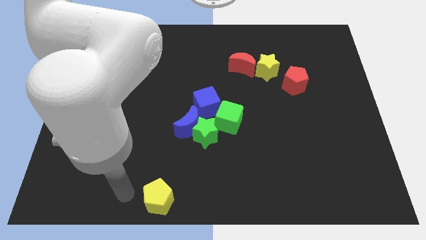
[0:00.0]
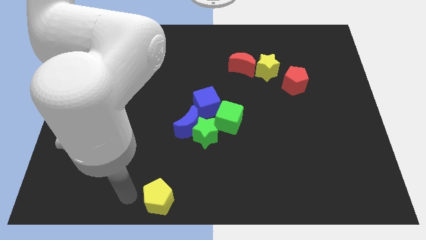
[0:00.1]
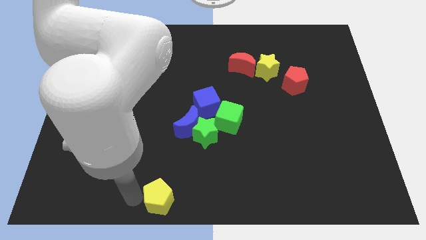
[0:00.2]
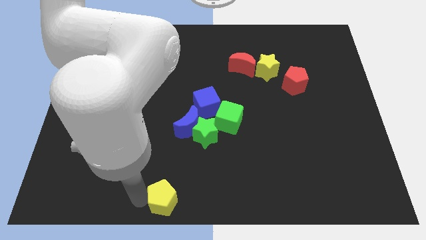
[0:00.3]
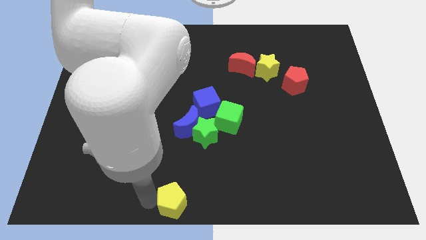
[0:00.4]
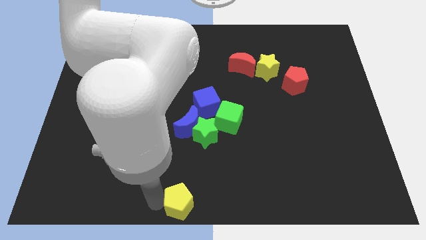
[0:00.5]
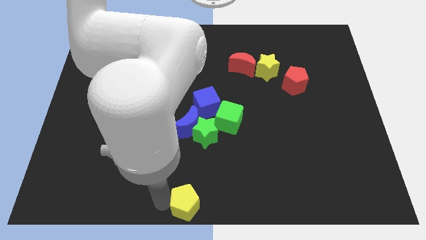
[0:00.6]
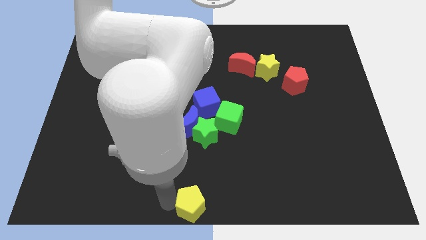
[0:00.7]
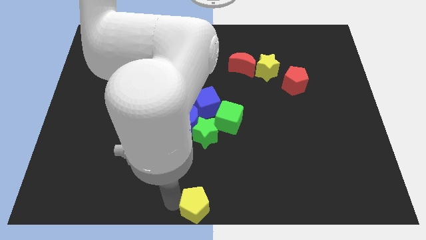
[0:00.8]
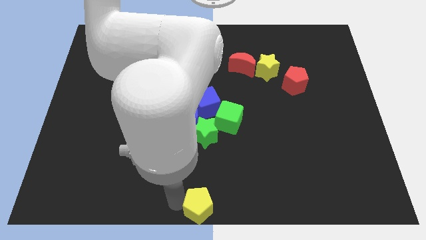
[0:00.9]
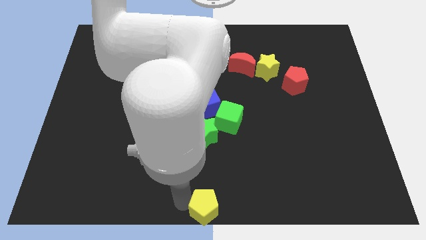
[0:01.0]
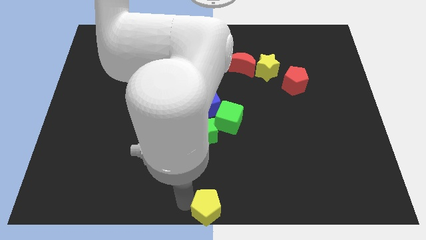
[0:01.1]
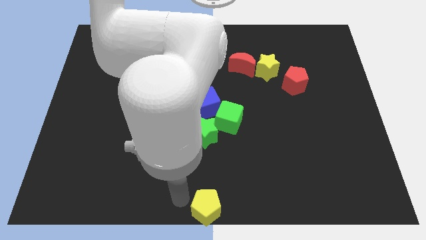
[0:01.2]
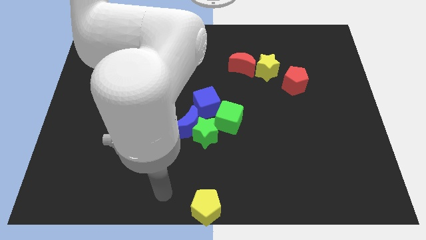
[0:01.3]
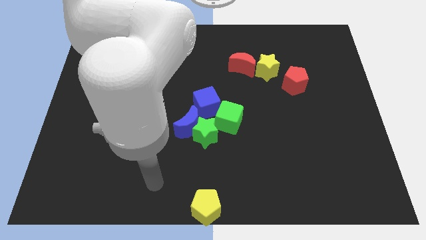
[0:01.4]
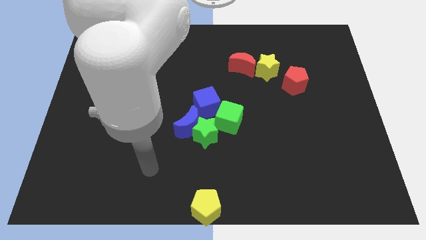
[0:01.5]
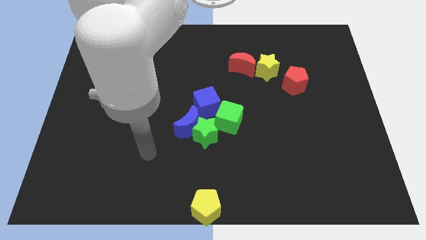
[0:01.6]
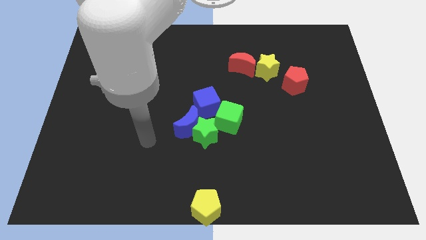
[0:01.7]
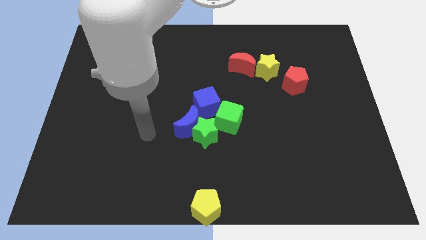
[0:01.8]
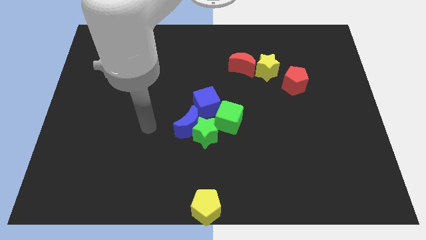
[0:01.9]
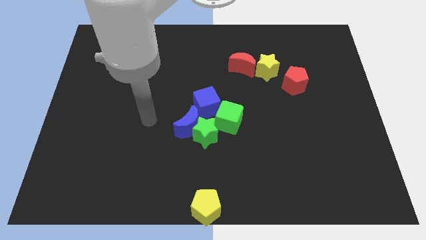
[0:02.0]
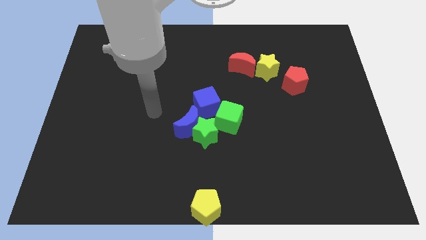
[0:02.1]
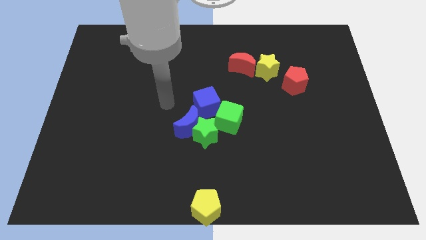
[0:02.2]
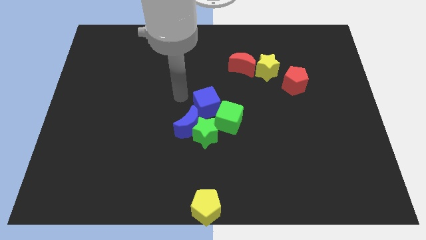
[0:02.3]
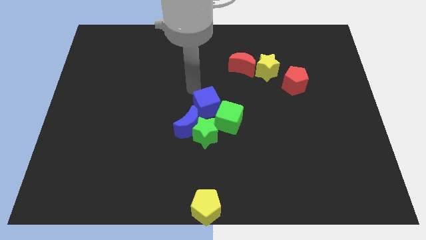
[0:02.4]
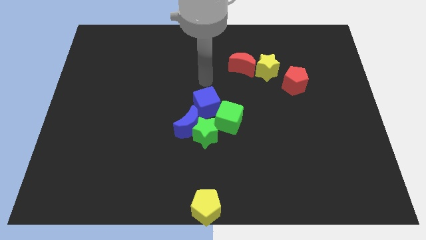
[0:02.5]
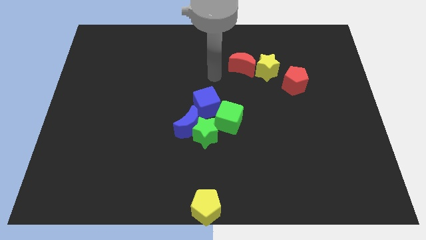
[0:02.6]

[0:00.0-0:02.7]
place the yellow pentagon to the bottom center

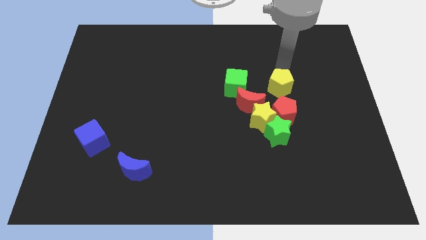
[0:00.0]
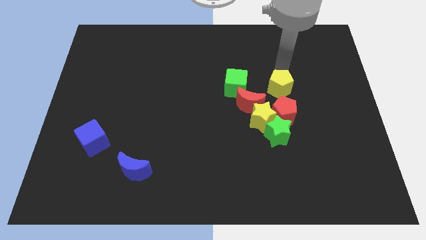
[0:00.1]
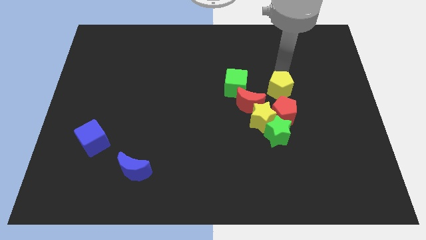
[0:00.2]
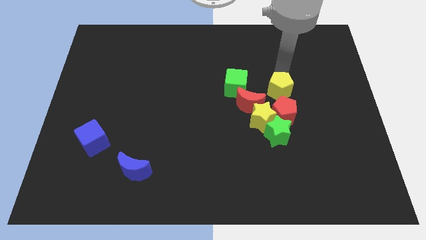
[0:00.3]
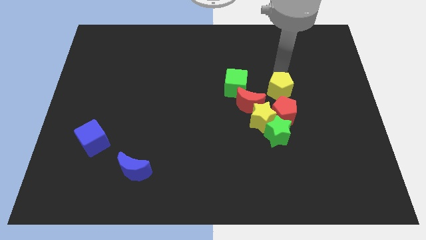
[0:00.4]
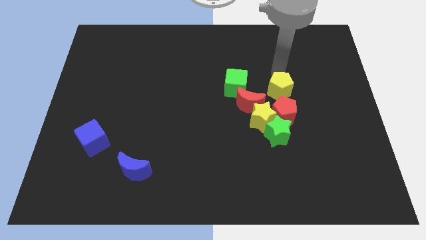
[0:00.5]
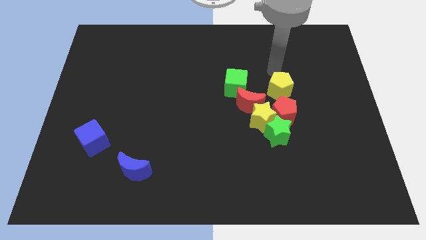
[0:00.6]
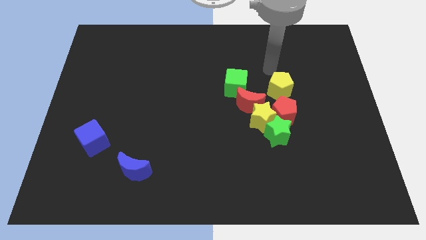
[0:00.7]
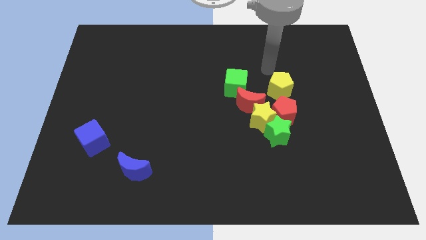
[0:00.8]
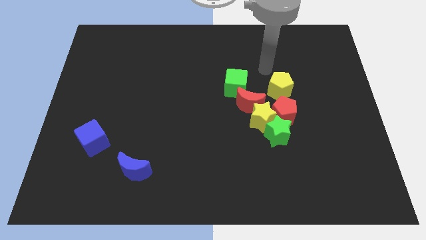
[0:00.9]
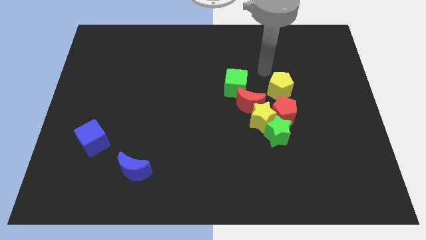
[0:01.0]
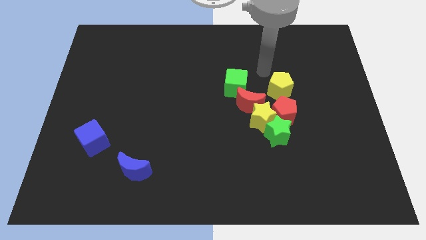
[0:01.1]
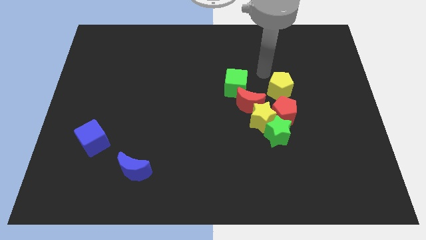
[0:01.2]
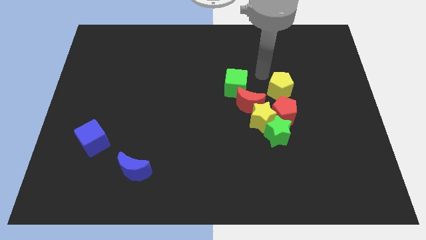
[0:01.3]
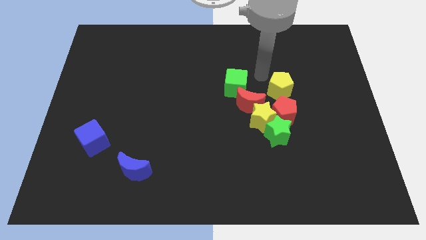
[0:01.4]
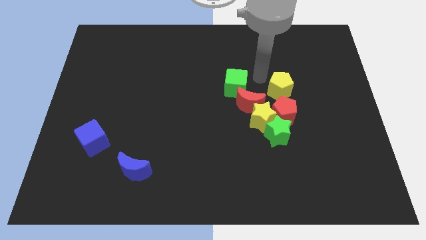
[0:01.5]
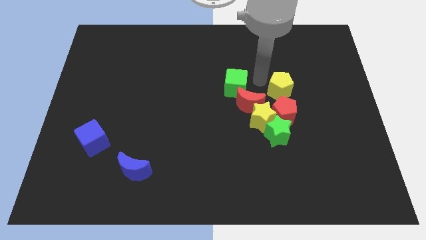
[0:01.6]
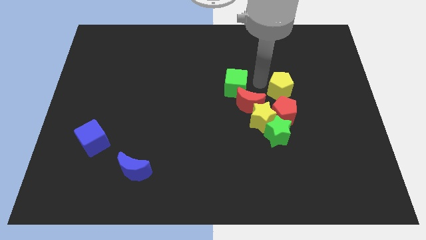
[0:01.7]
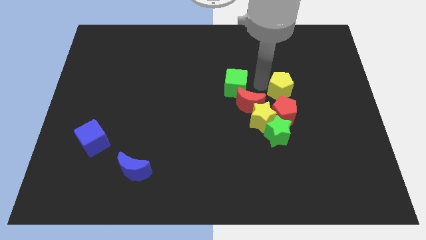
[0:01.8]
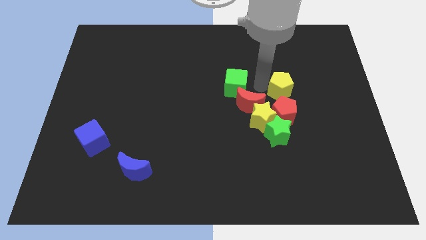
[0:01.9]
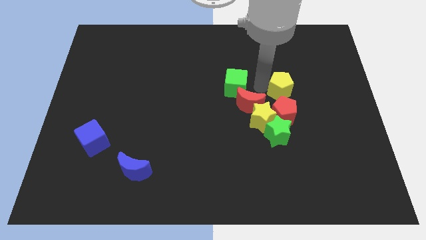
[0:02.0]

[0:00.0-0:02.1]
move the yellow pentagon close to the red pentagon

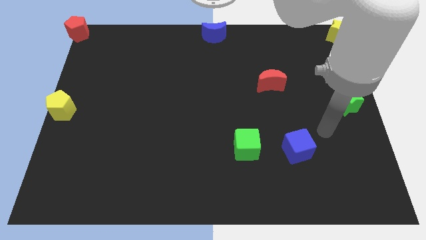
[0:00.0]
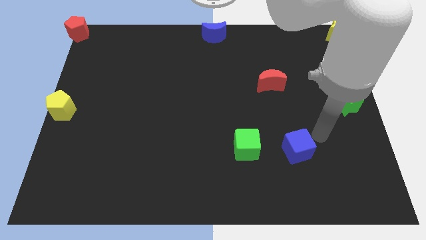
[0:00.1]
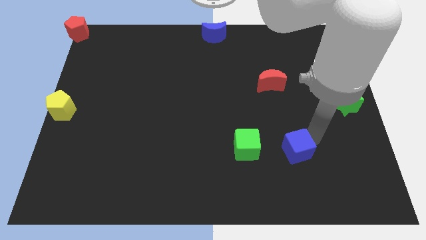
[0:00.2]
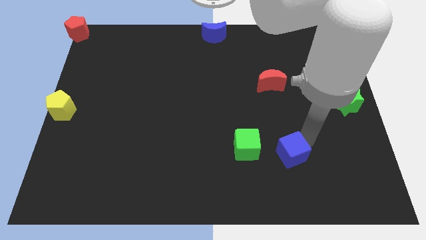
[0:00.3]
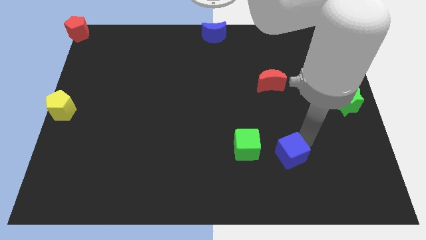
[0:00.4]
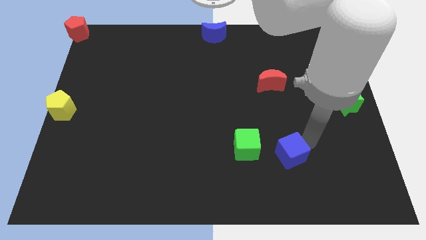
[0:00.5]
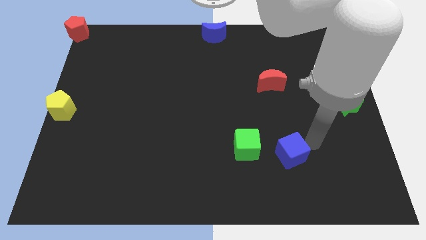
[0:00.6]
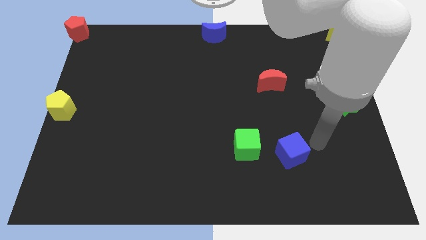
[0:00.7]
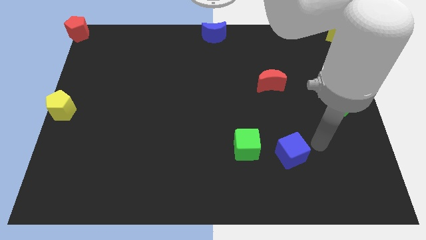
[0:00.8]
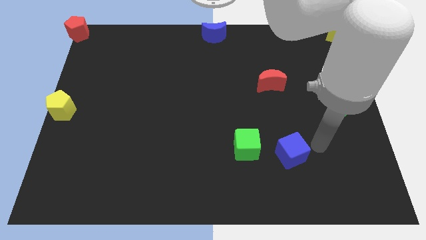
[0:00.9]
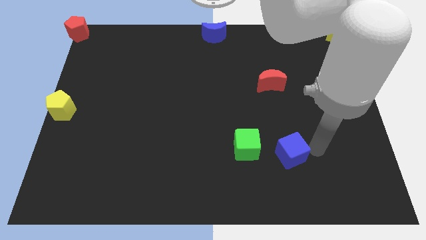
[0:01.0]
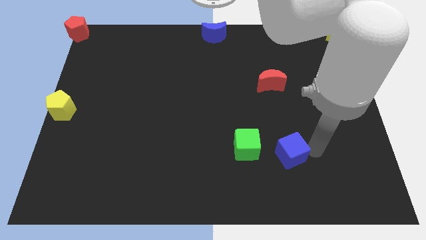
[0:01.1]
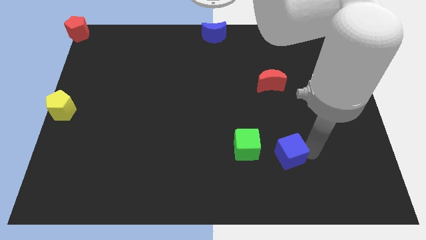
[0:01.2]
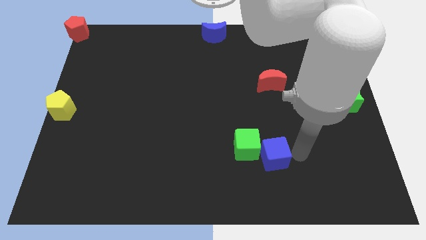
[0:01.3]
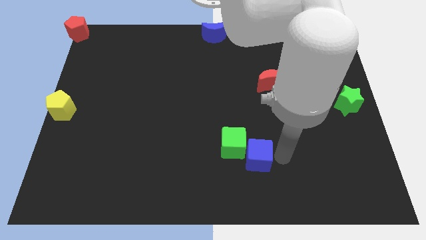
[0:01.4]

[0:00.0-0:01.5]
push blue cube into the green cube

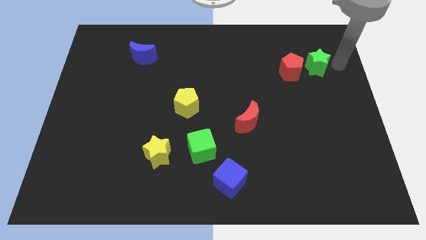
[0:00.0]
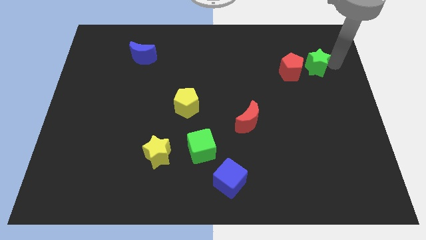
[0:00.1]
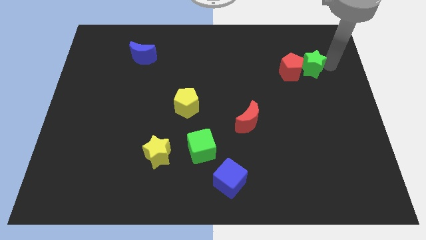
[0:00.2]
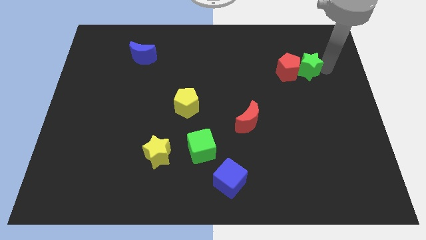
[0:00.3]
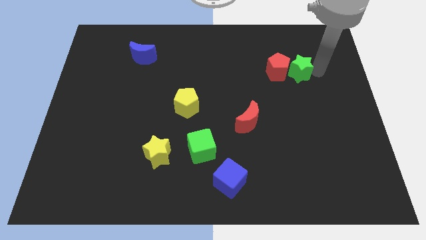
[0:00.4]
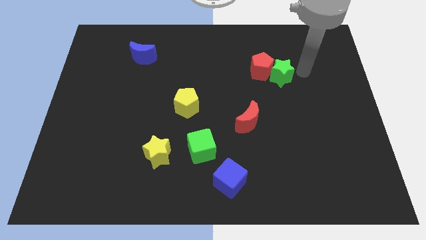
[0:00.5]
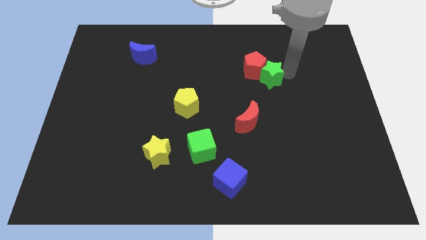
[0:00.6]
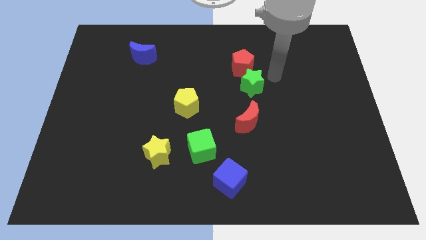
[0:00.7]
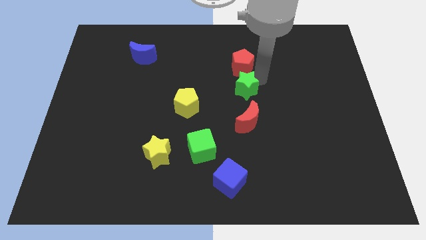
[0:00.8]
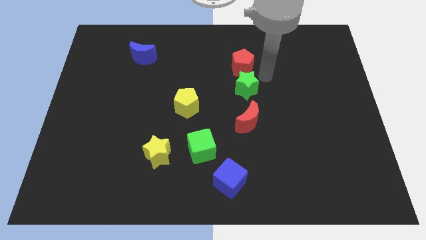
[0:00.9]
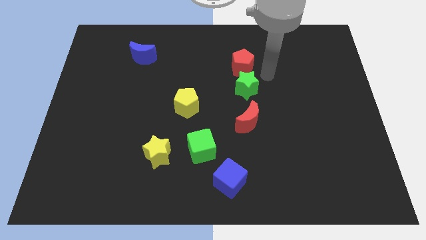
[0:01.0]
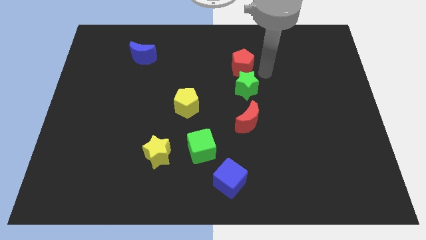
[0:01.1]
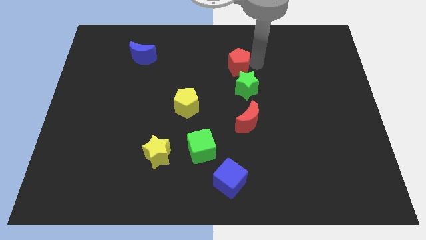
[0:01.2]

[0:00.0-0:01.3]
place red pentagon above green star

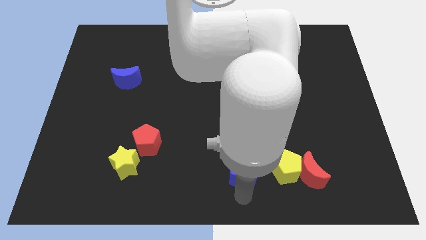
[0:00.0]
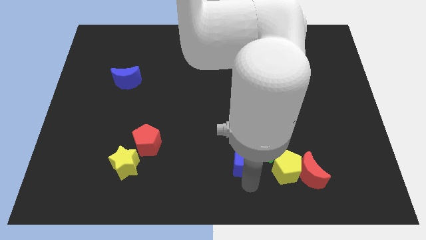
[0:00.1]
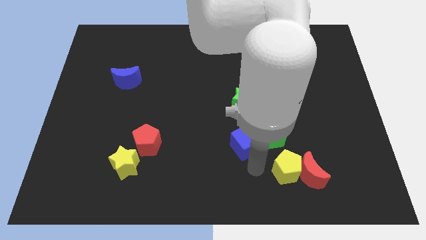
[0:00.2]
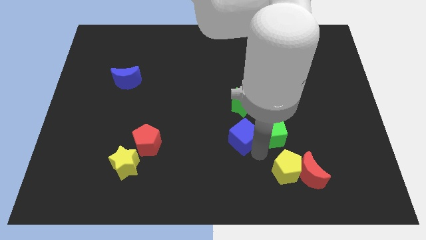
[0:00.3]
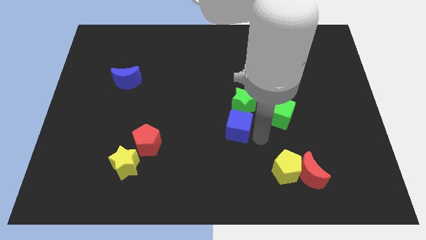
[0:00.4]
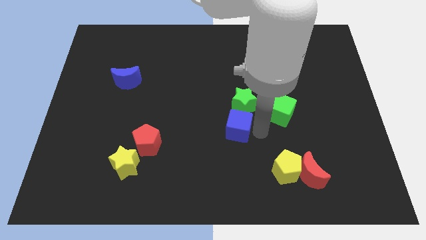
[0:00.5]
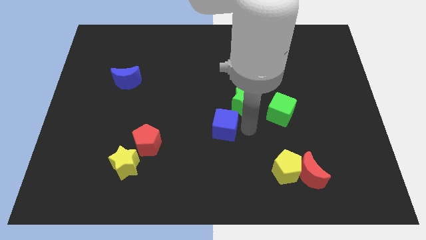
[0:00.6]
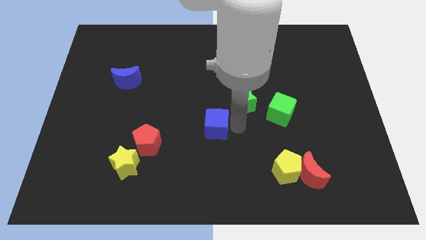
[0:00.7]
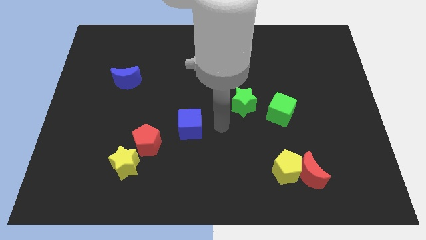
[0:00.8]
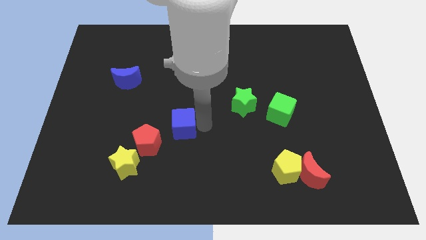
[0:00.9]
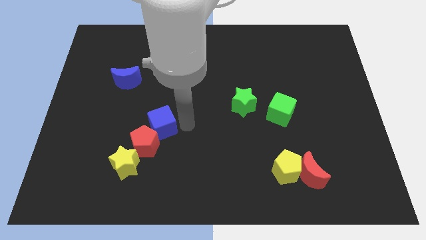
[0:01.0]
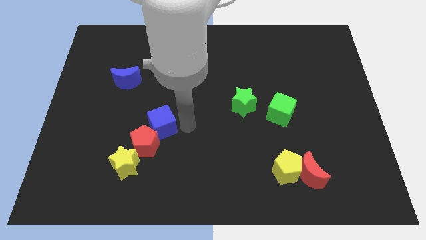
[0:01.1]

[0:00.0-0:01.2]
push the blue cube to the left side of the board

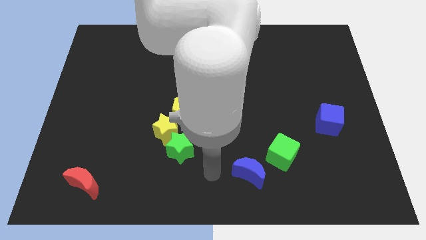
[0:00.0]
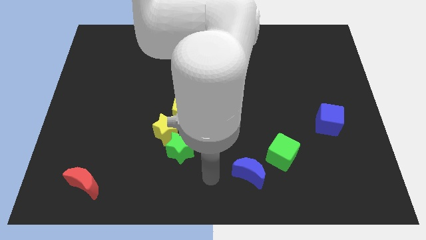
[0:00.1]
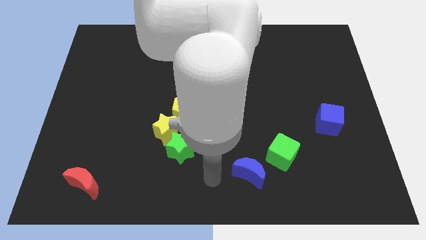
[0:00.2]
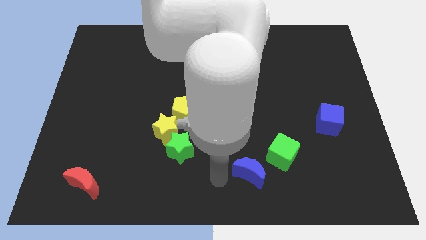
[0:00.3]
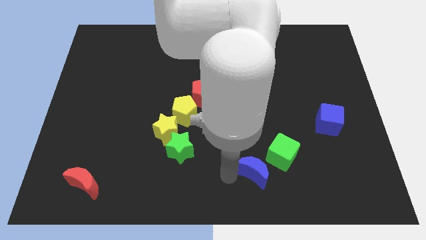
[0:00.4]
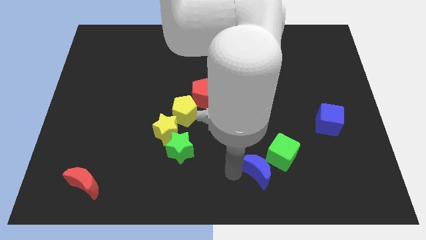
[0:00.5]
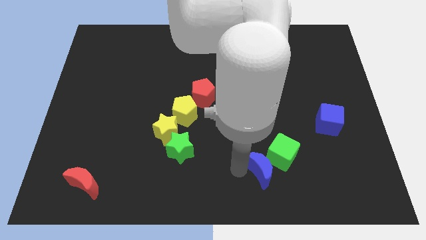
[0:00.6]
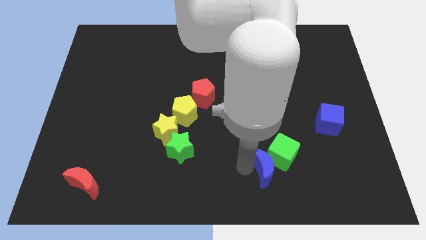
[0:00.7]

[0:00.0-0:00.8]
move the blue crescent close to the green cube
